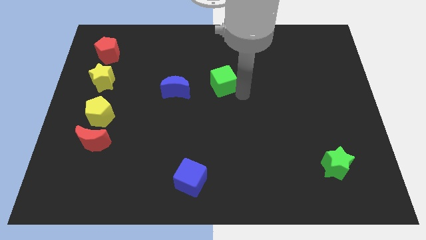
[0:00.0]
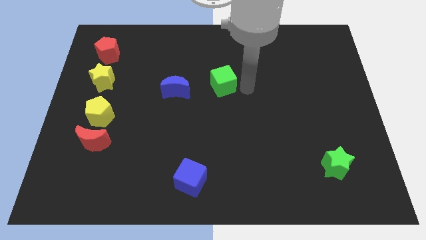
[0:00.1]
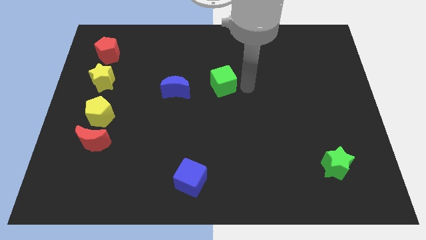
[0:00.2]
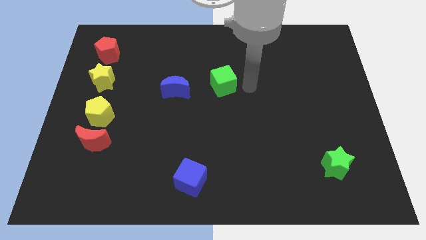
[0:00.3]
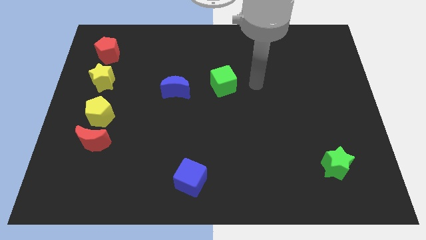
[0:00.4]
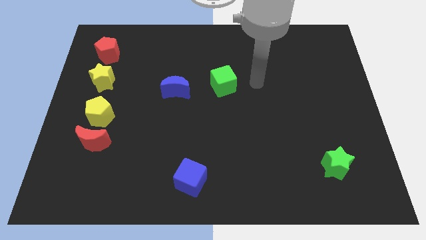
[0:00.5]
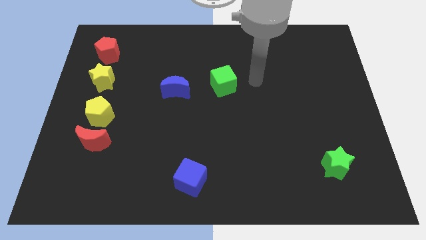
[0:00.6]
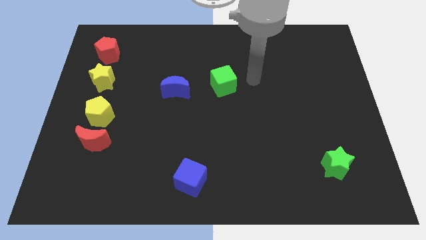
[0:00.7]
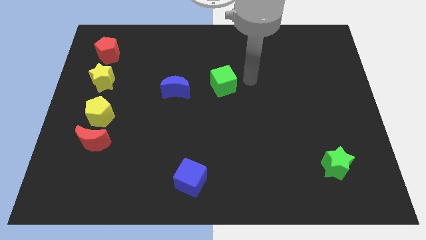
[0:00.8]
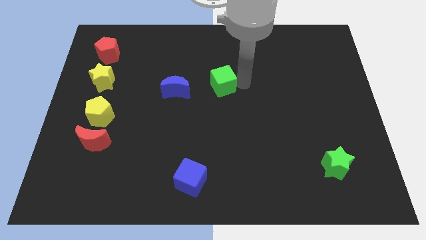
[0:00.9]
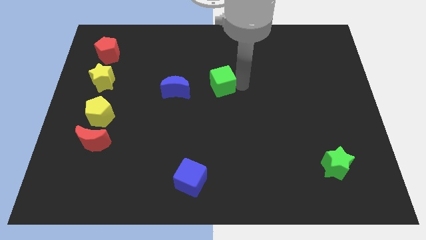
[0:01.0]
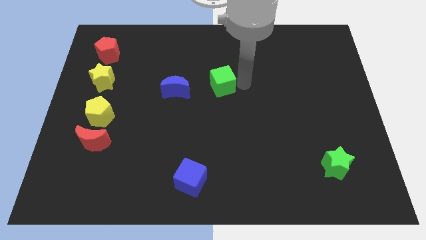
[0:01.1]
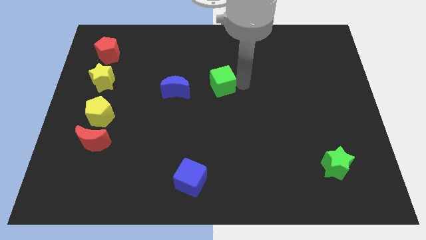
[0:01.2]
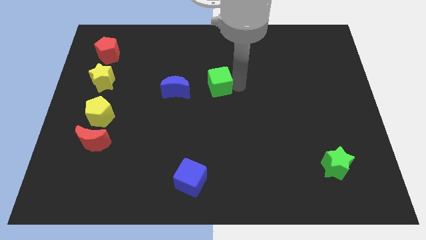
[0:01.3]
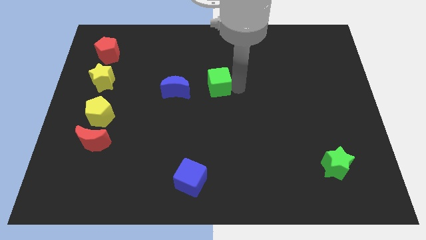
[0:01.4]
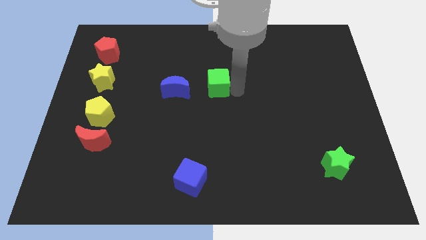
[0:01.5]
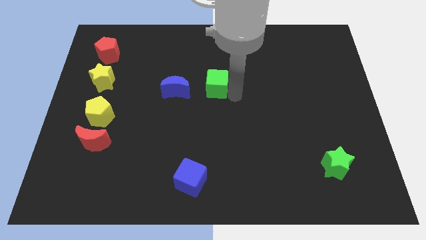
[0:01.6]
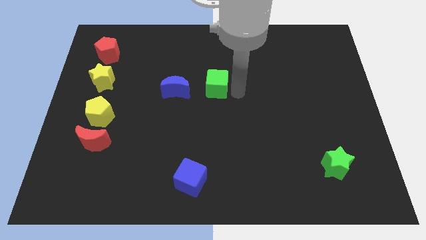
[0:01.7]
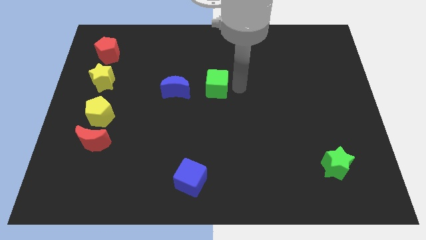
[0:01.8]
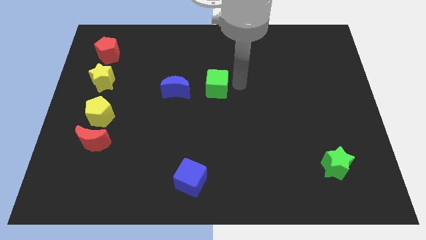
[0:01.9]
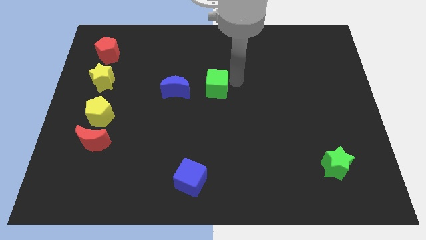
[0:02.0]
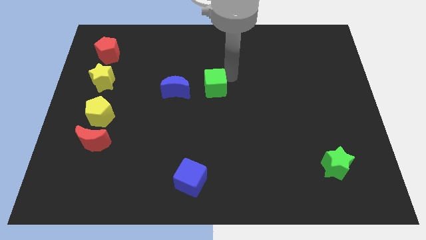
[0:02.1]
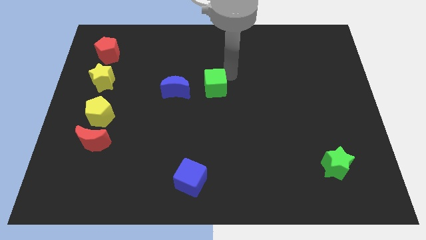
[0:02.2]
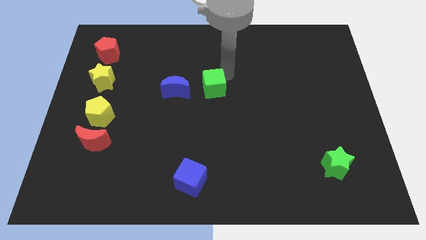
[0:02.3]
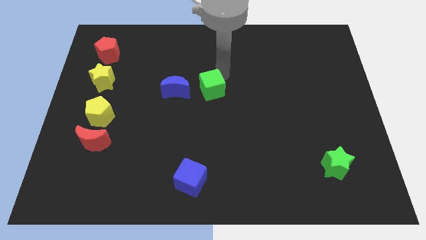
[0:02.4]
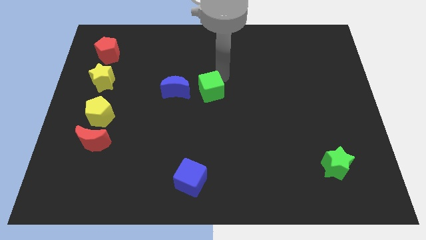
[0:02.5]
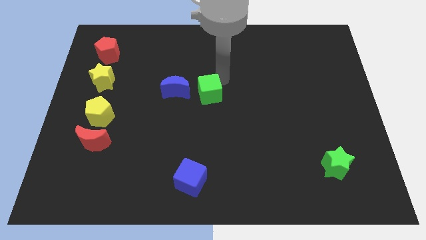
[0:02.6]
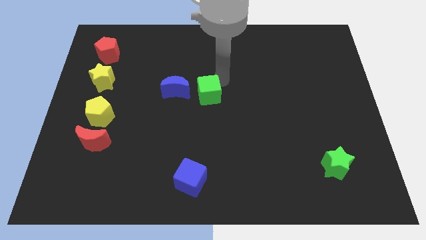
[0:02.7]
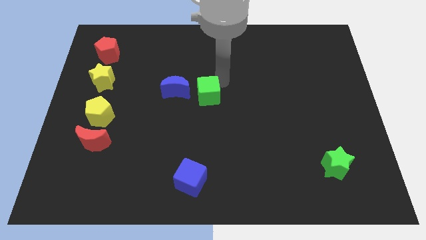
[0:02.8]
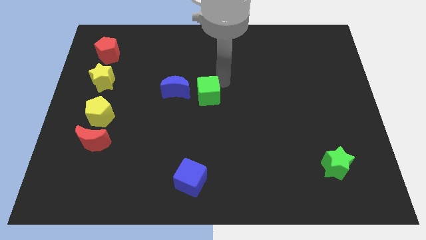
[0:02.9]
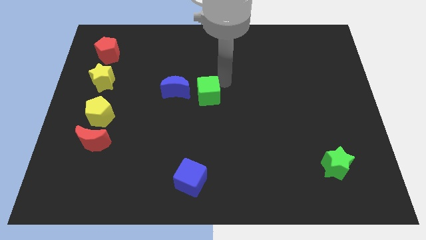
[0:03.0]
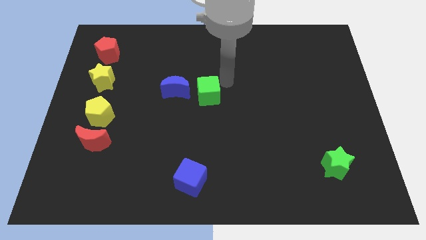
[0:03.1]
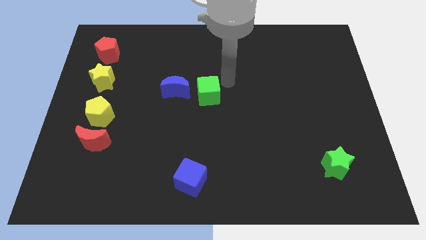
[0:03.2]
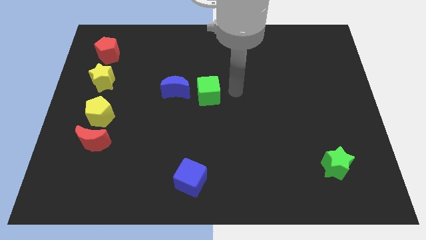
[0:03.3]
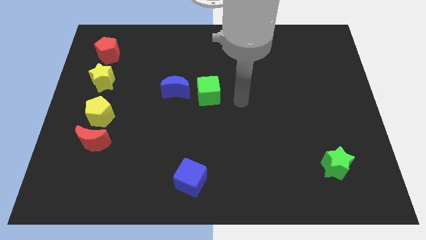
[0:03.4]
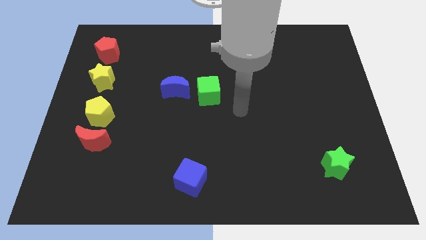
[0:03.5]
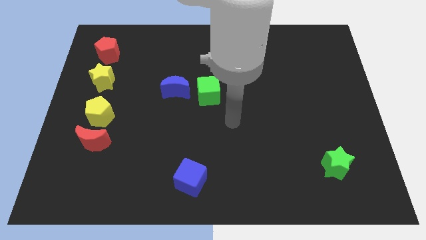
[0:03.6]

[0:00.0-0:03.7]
slightly push the green cube to the center

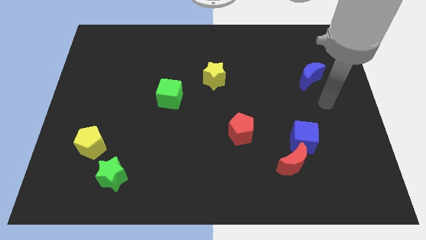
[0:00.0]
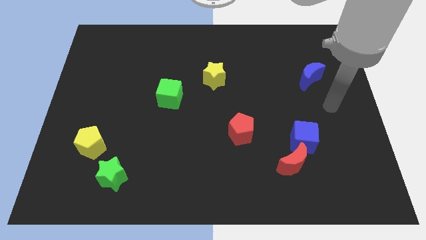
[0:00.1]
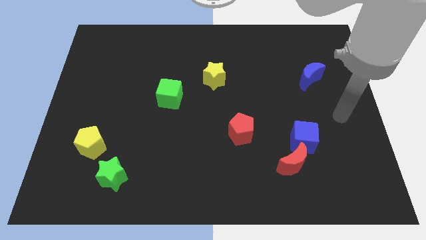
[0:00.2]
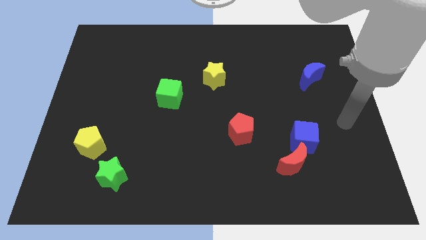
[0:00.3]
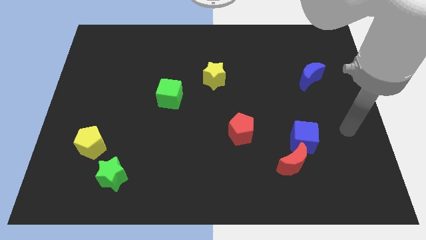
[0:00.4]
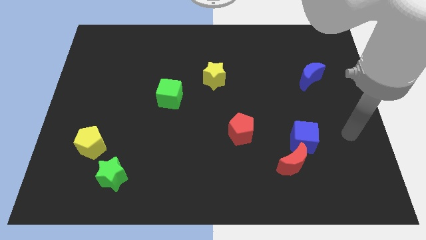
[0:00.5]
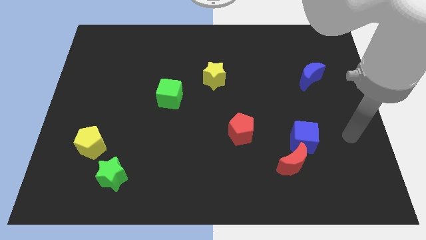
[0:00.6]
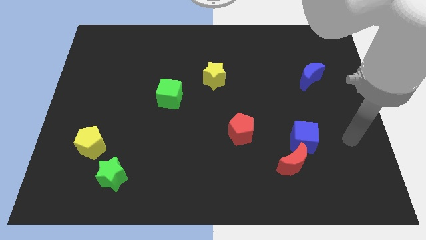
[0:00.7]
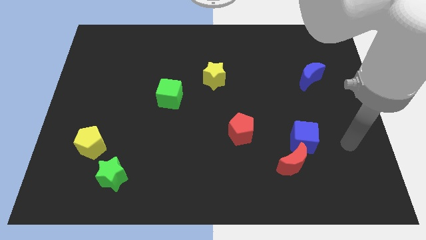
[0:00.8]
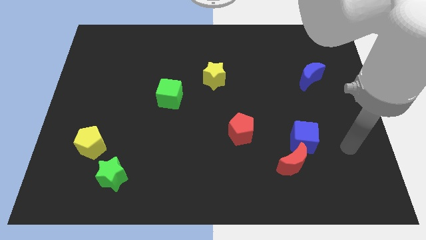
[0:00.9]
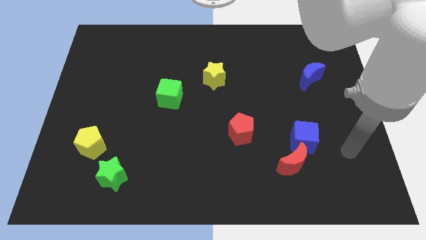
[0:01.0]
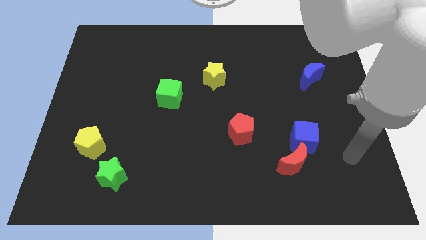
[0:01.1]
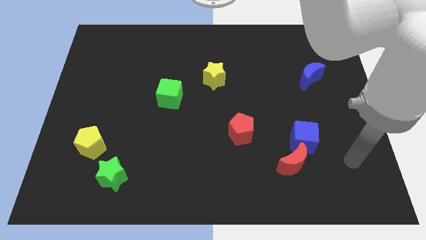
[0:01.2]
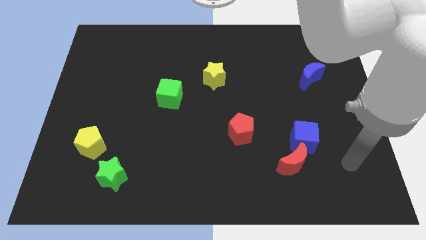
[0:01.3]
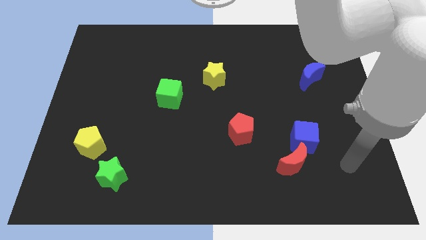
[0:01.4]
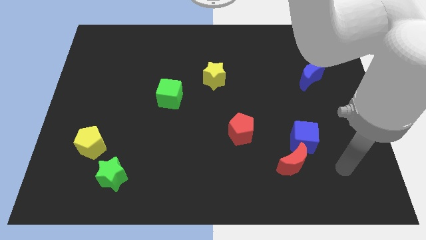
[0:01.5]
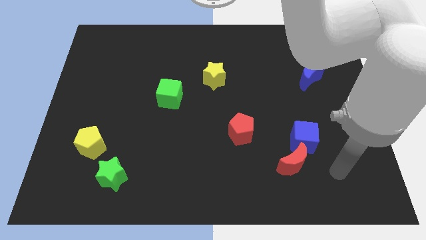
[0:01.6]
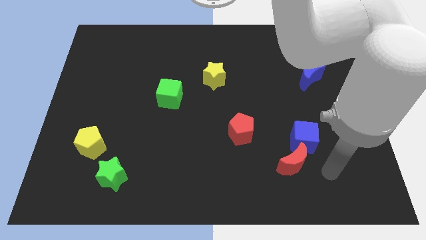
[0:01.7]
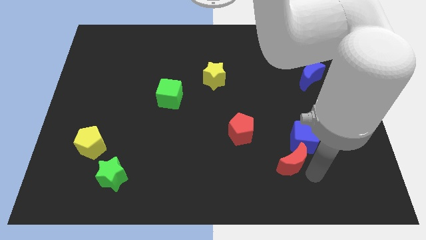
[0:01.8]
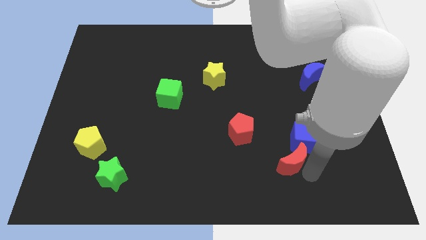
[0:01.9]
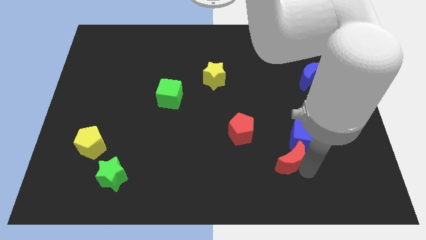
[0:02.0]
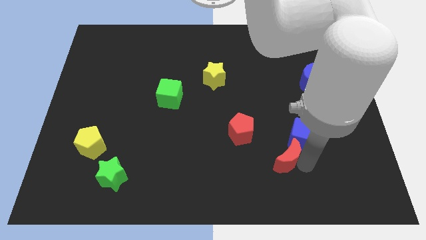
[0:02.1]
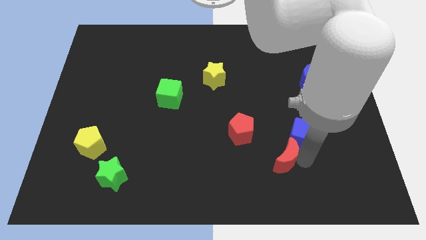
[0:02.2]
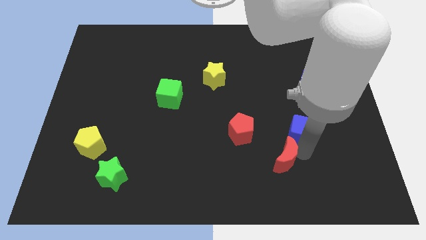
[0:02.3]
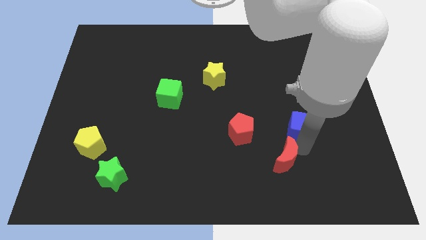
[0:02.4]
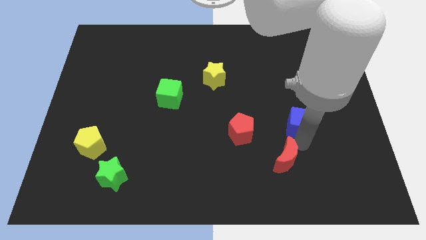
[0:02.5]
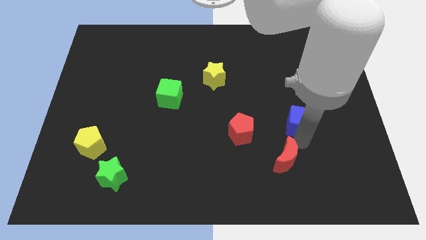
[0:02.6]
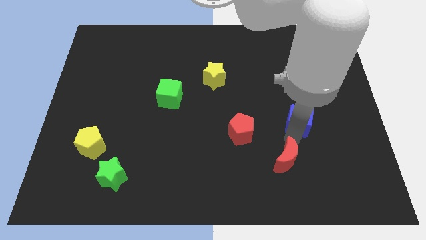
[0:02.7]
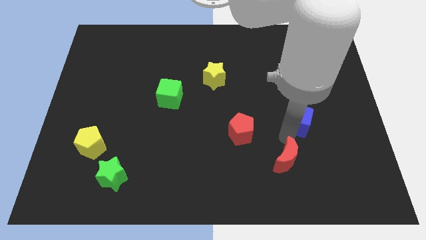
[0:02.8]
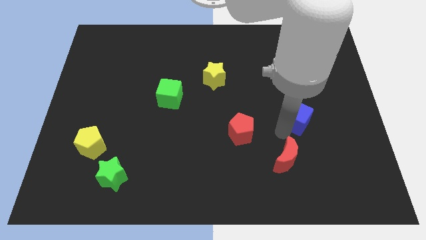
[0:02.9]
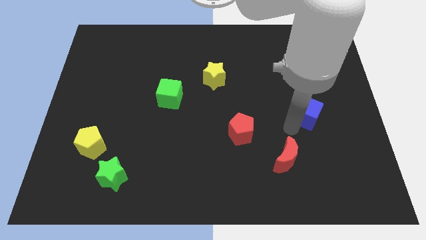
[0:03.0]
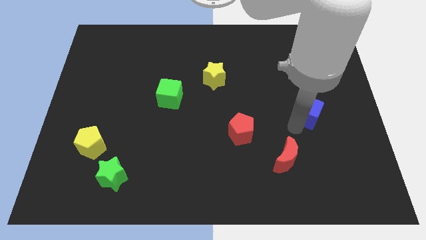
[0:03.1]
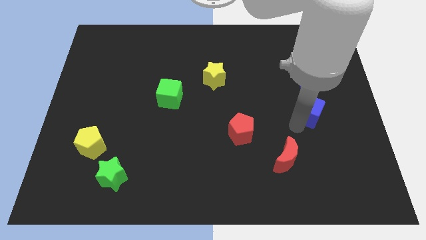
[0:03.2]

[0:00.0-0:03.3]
move the blue cube away from the red moon

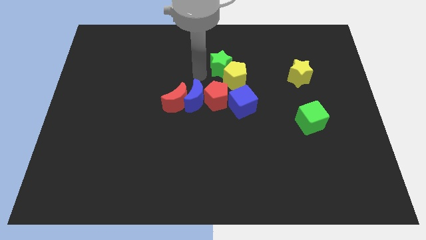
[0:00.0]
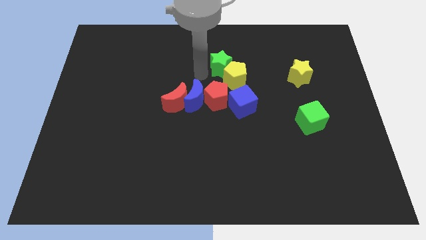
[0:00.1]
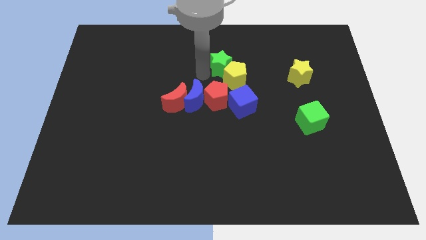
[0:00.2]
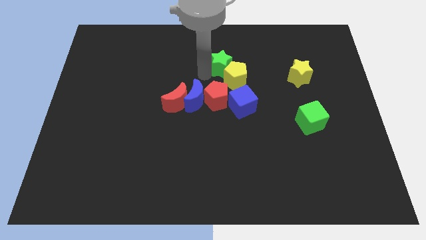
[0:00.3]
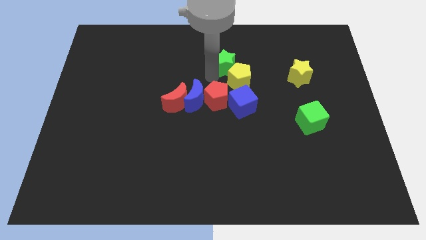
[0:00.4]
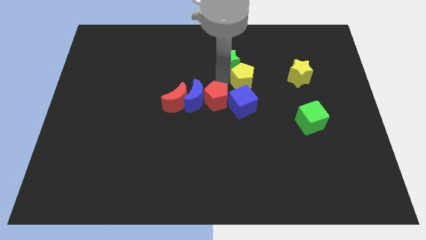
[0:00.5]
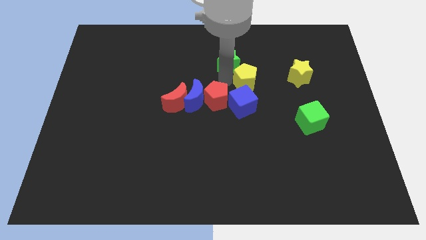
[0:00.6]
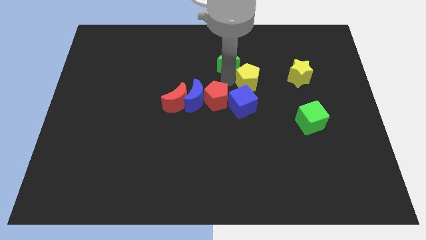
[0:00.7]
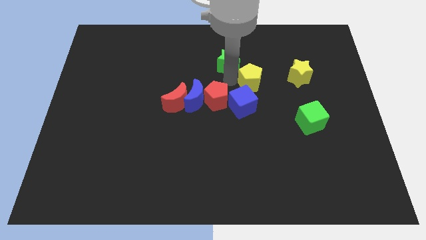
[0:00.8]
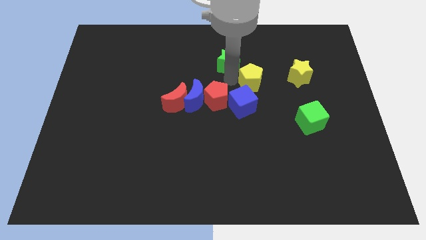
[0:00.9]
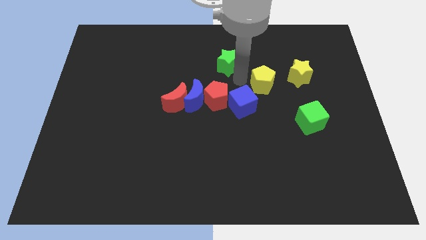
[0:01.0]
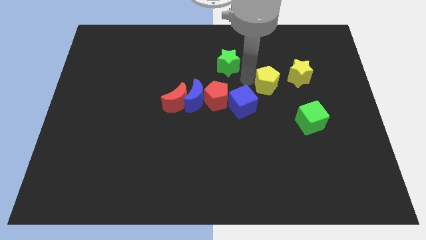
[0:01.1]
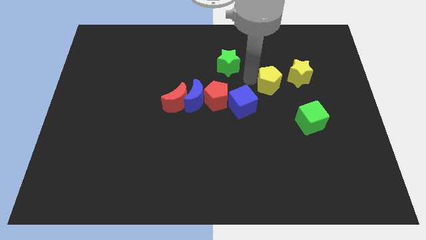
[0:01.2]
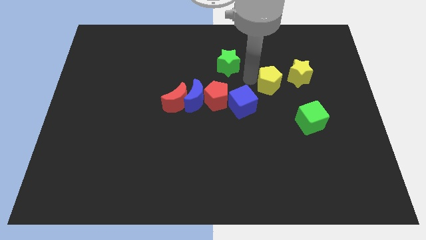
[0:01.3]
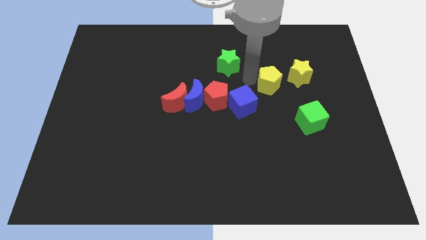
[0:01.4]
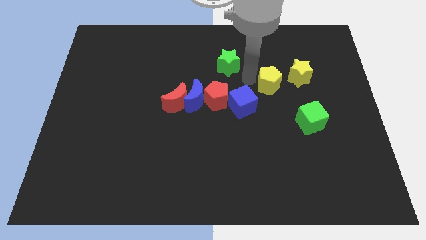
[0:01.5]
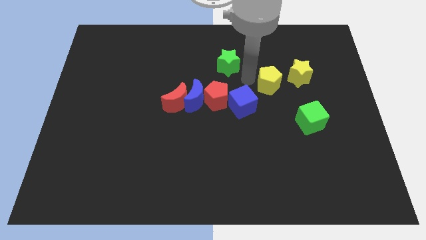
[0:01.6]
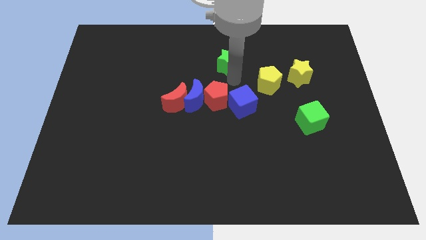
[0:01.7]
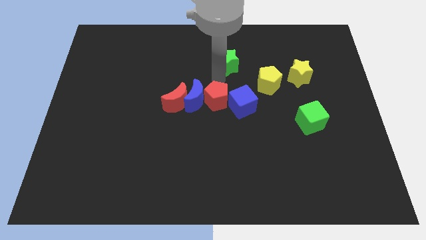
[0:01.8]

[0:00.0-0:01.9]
push the yellow pentagon to the left of the yellow star
